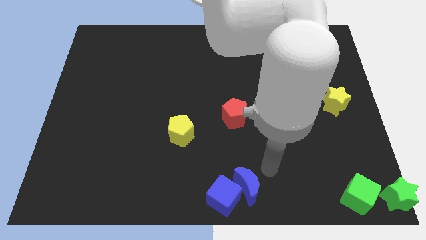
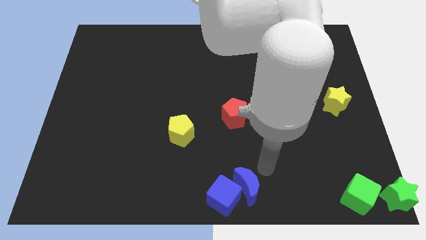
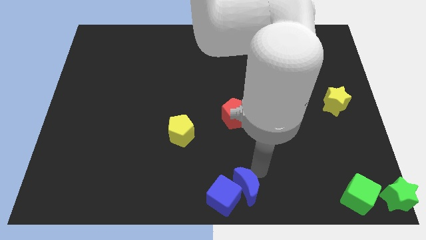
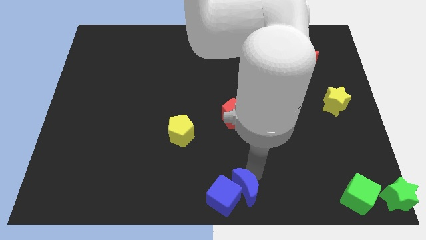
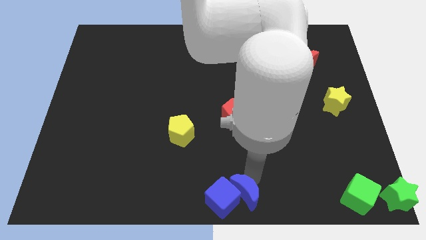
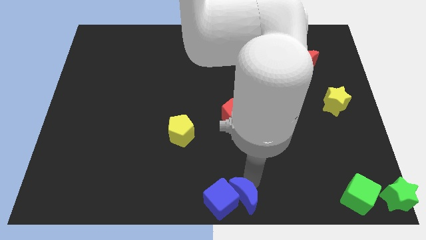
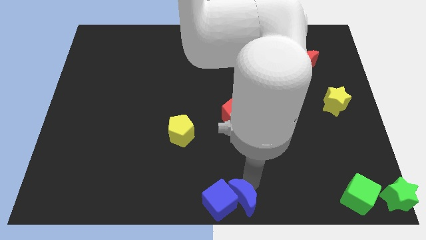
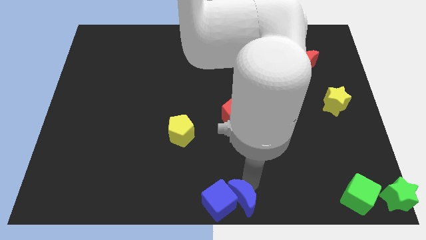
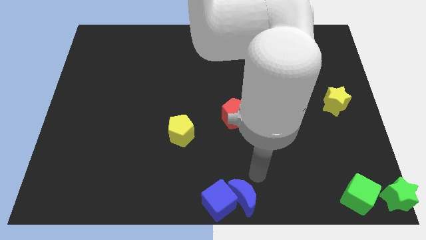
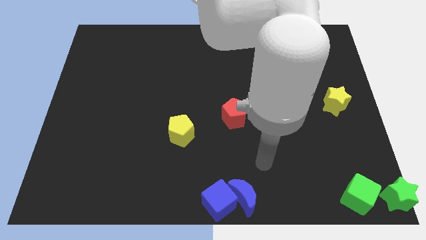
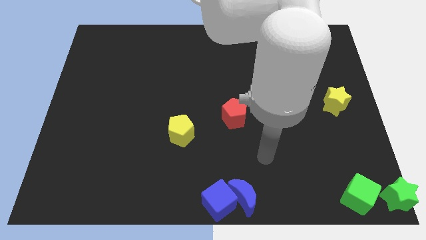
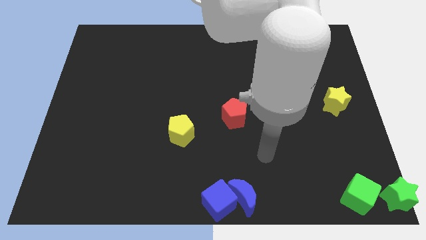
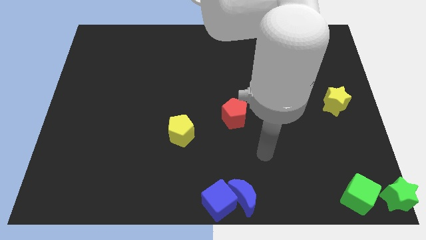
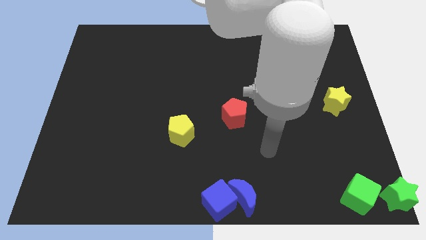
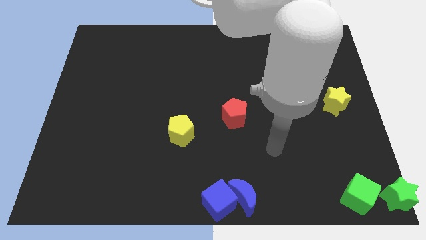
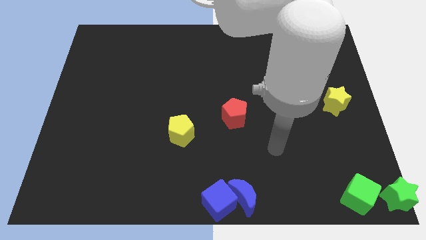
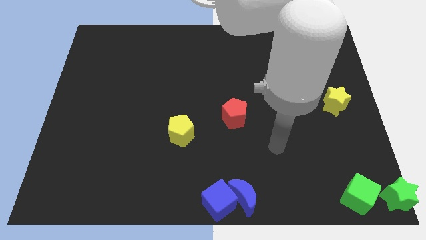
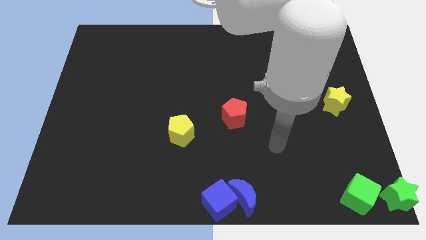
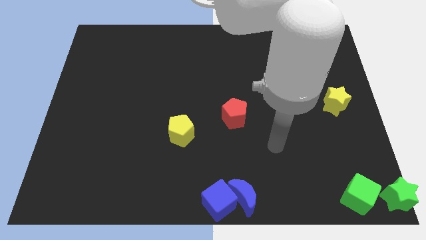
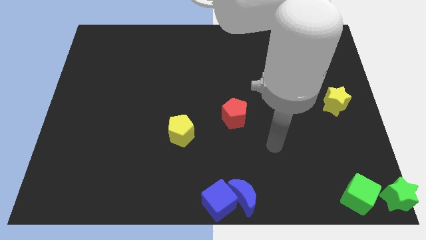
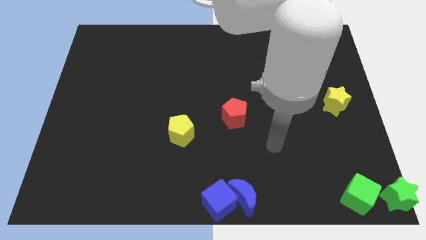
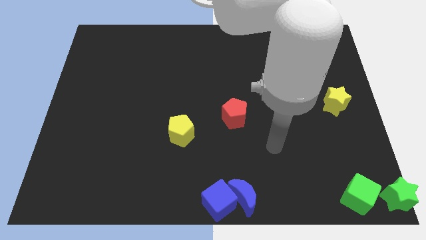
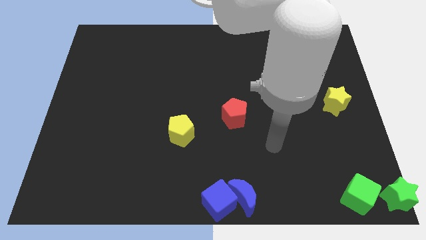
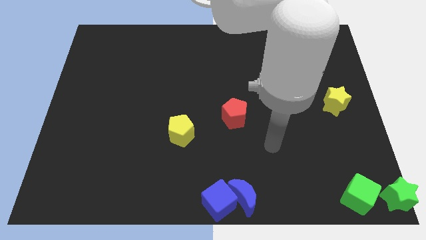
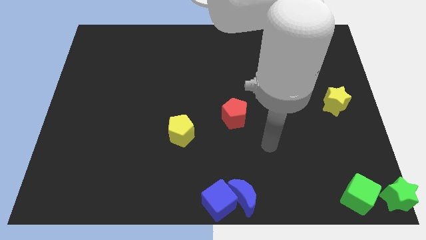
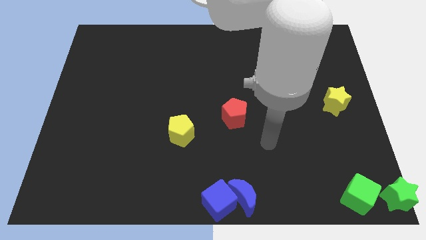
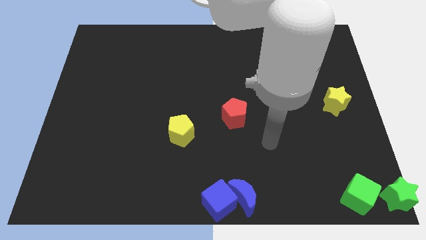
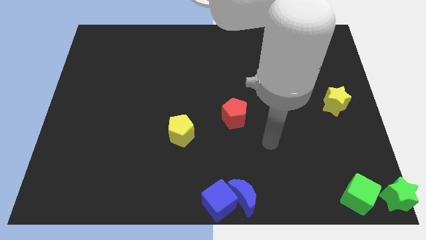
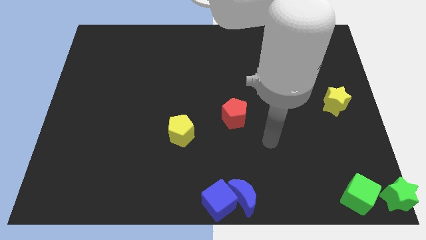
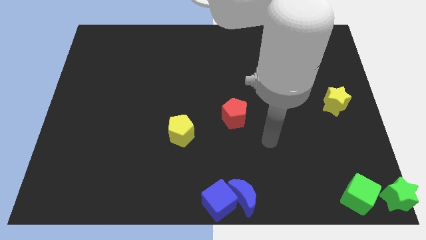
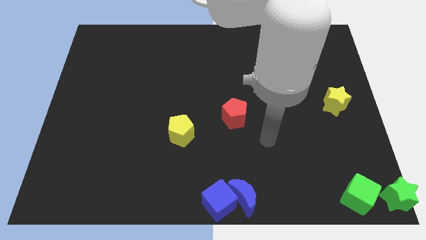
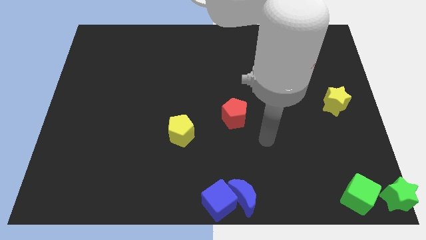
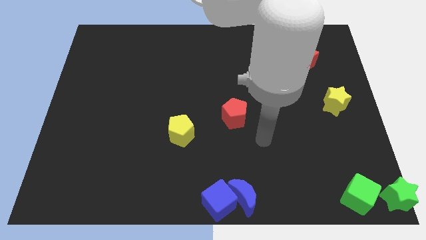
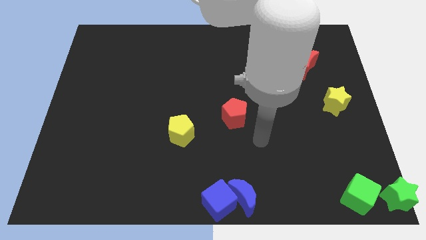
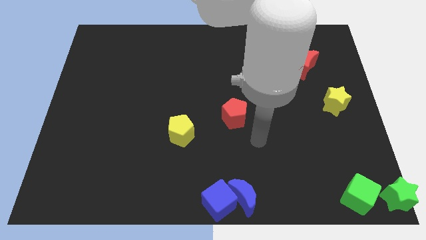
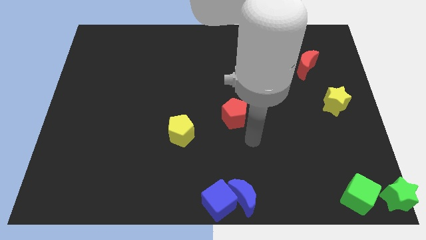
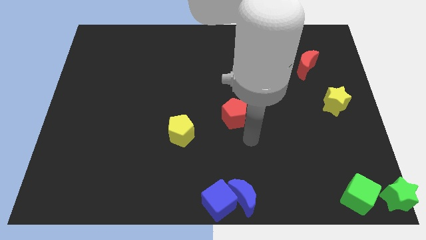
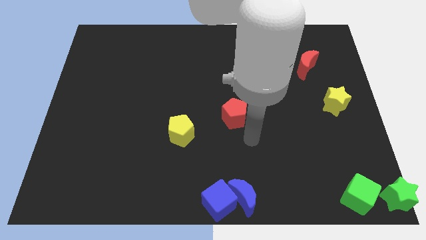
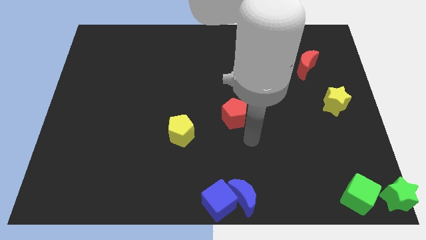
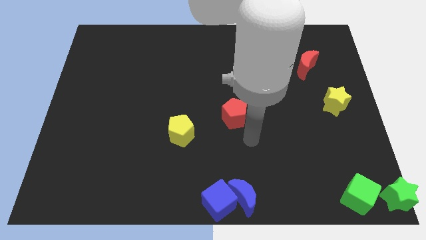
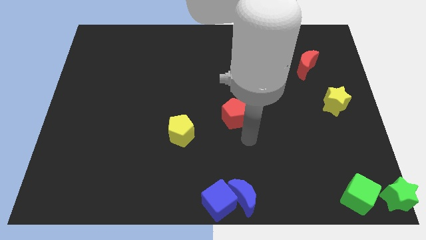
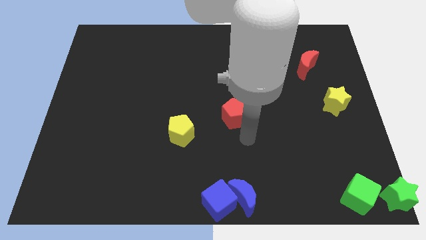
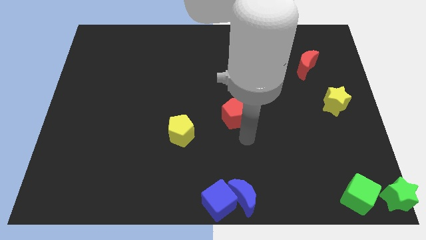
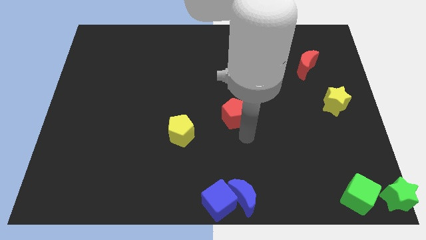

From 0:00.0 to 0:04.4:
drag the pointer to the bottom of the red pentagon

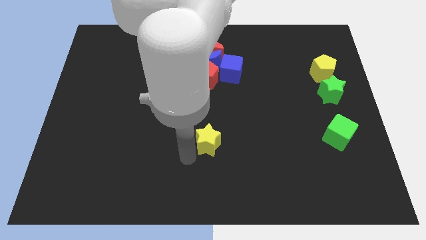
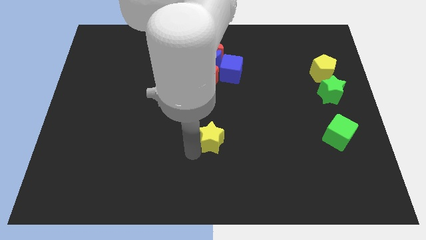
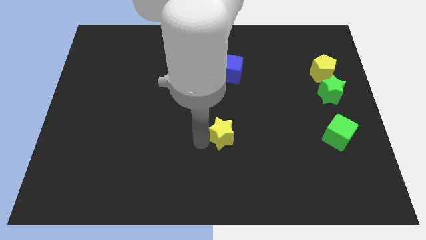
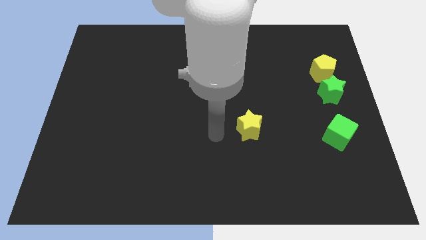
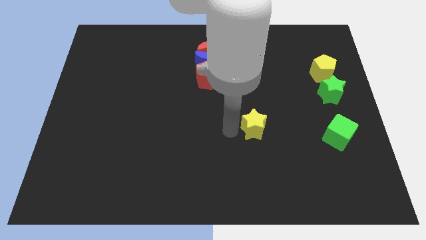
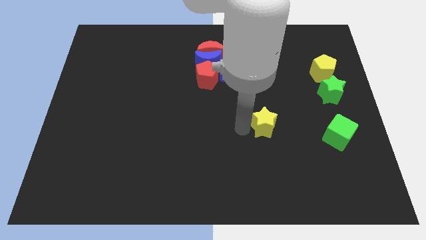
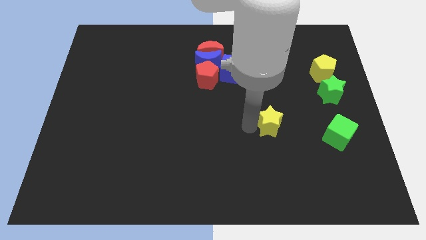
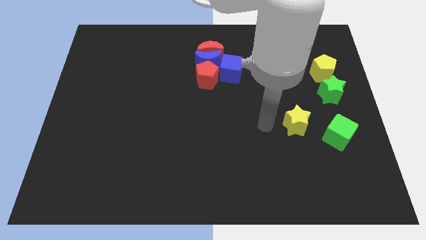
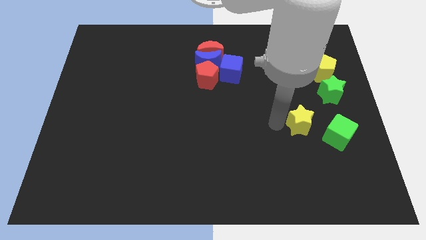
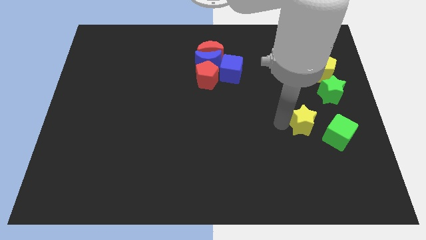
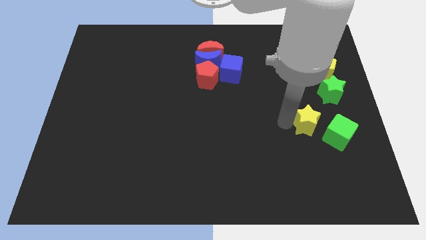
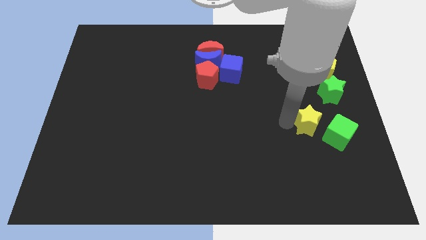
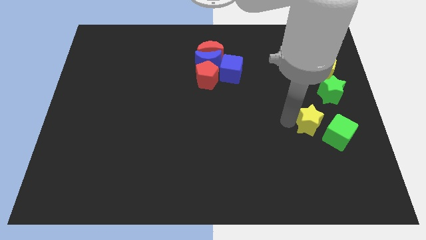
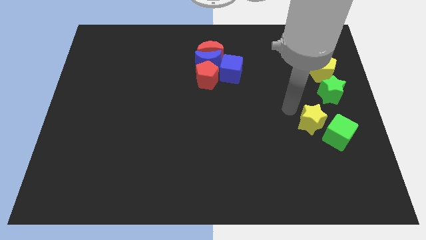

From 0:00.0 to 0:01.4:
place the yellow star left to the green cube

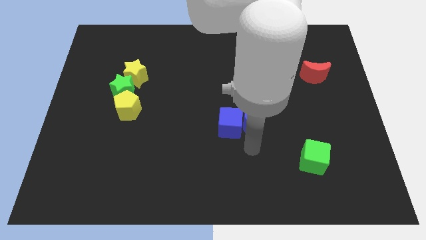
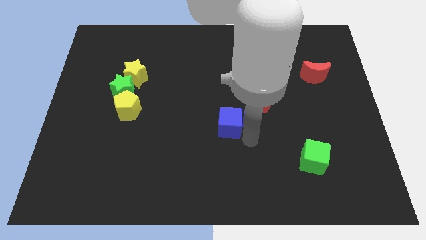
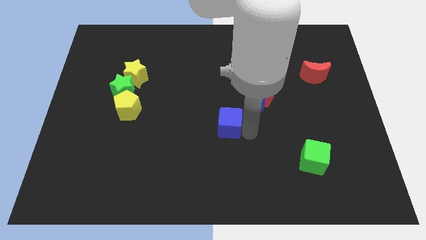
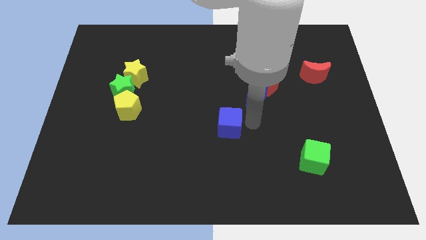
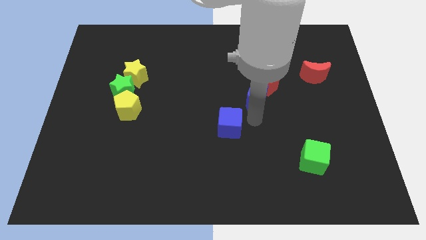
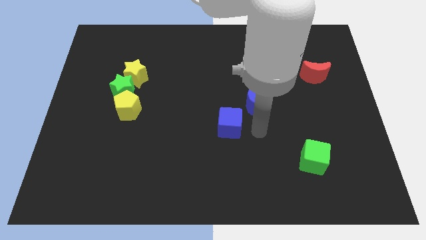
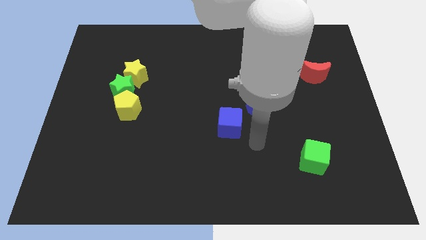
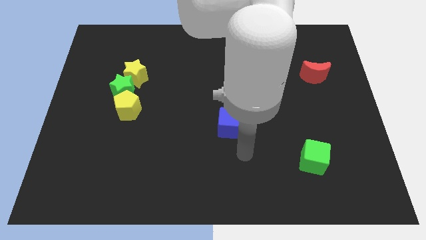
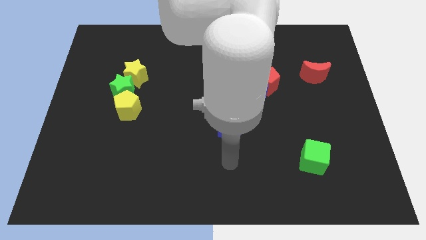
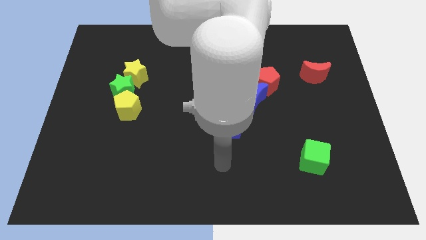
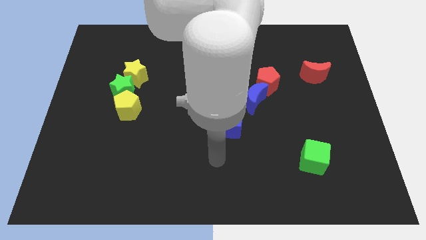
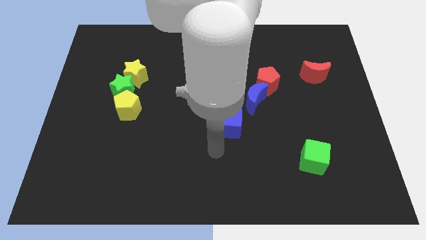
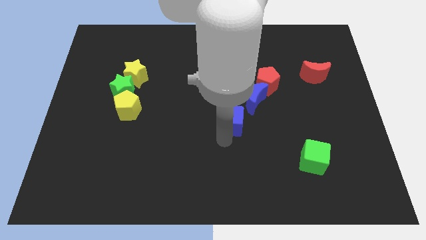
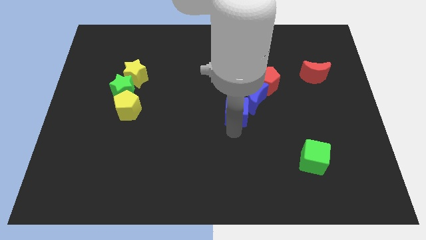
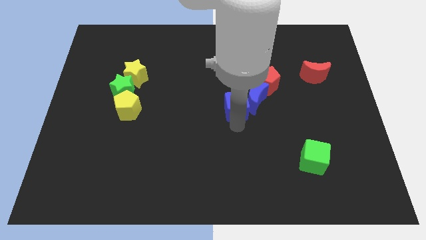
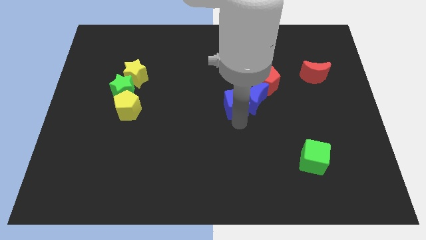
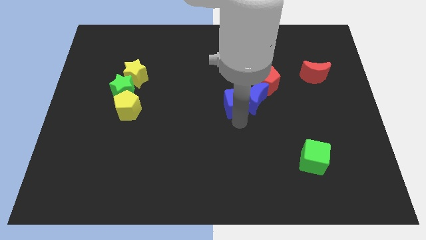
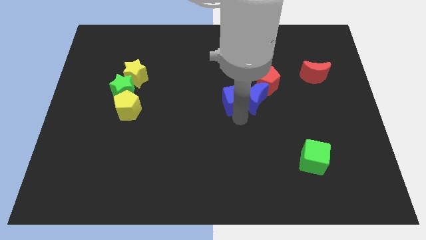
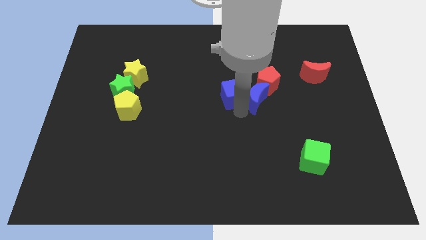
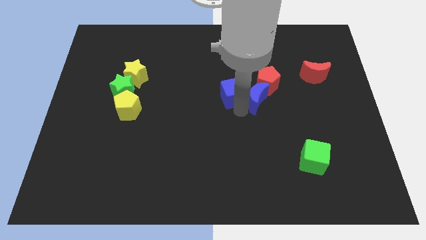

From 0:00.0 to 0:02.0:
place the blue cube close to the blue moon

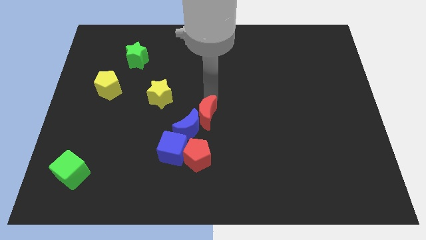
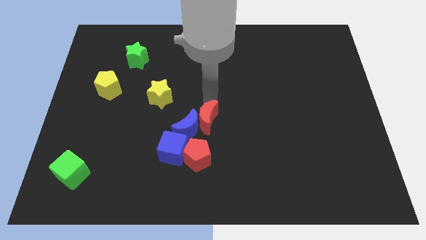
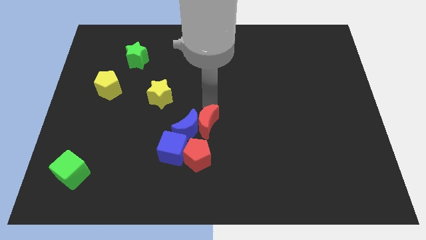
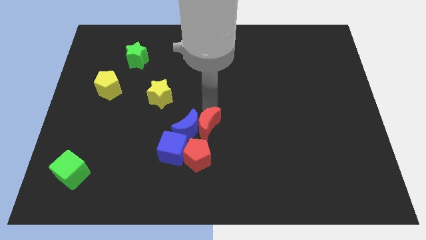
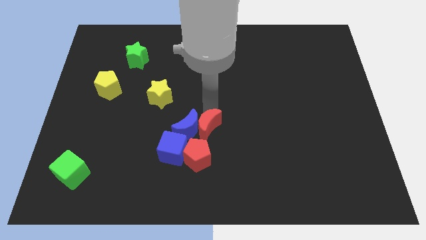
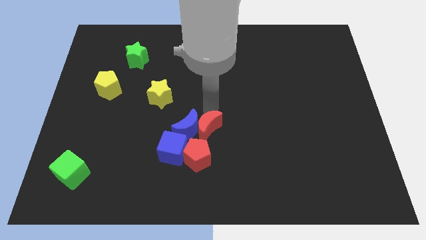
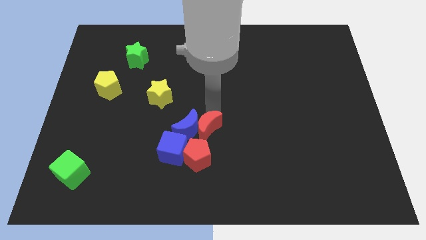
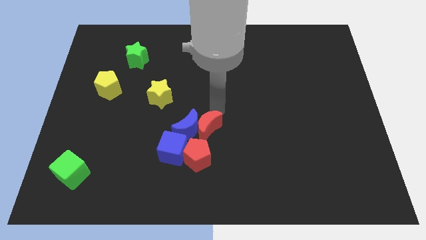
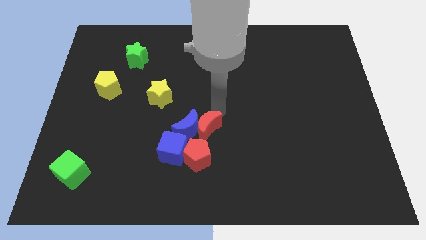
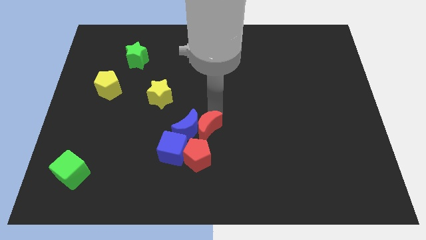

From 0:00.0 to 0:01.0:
move red moon close to the red pentagon

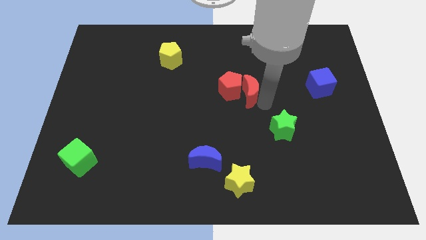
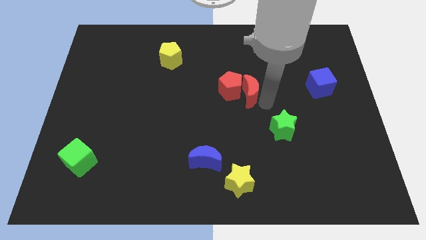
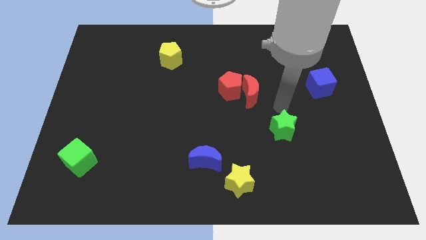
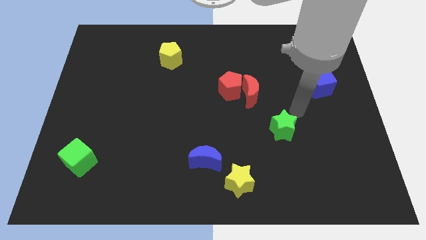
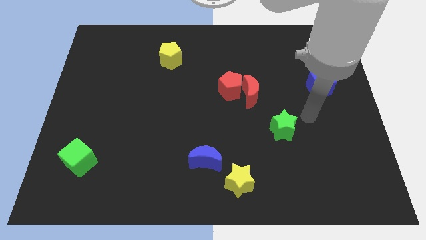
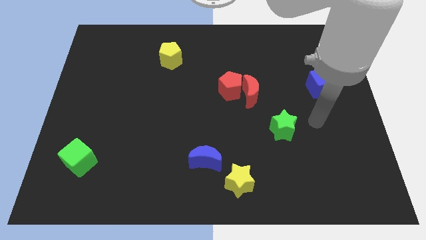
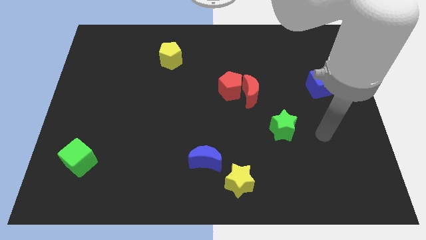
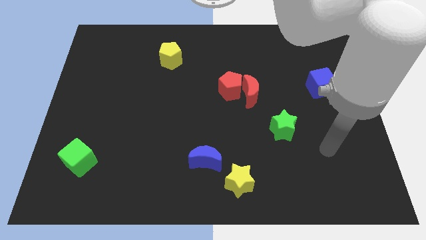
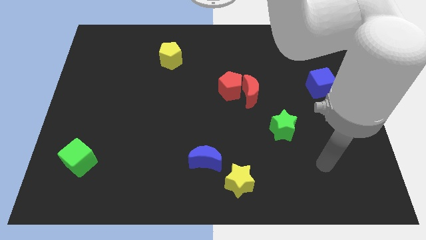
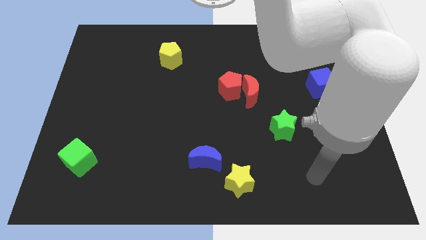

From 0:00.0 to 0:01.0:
point the arm to the right bottom of the green star
